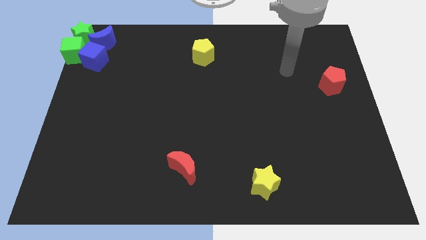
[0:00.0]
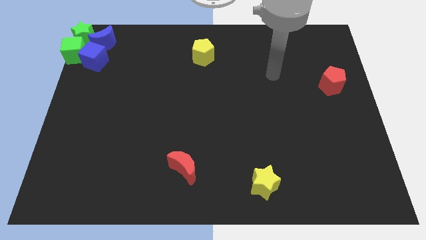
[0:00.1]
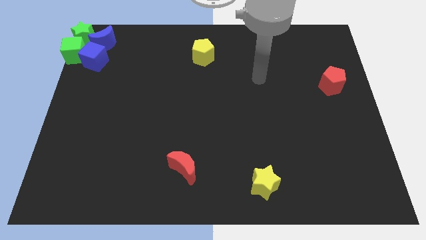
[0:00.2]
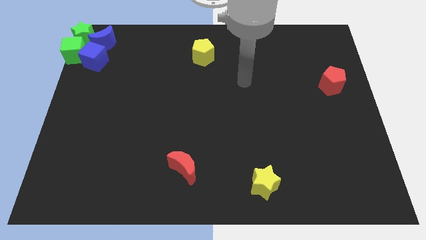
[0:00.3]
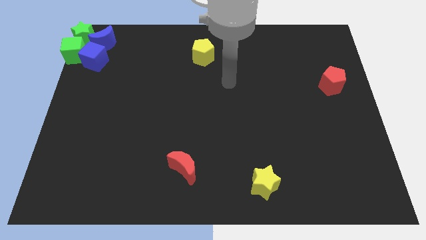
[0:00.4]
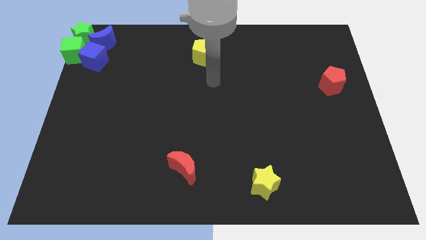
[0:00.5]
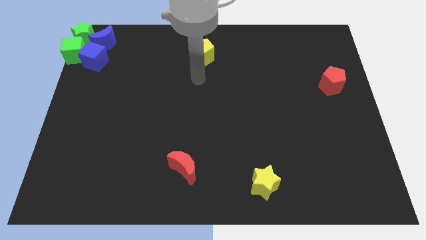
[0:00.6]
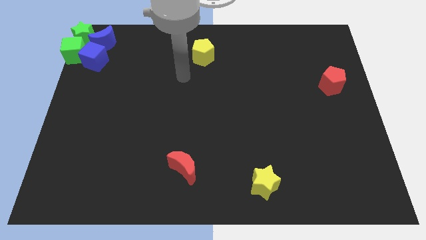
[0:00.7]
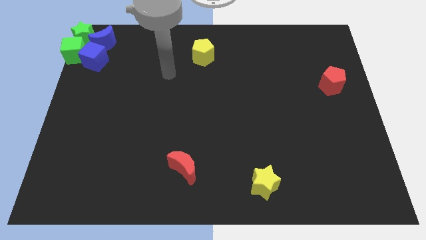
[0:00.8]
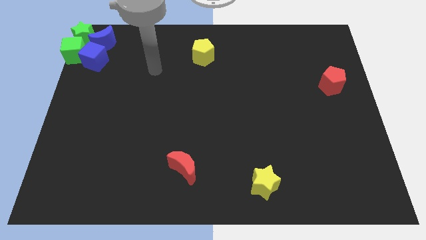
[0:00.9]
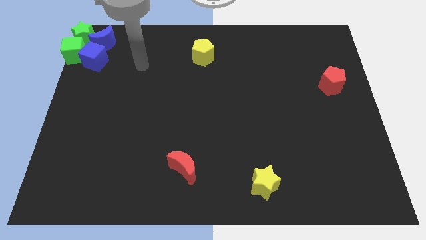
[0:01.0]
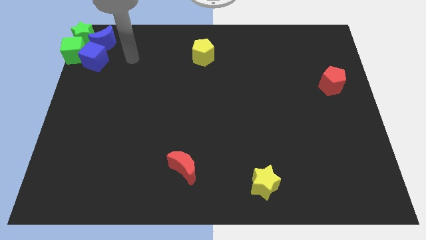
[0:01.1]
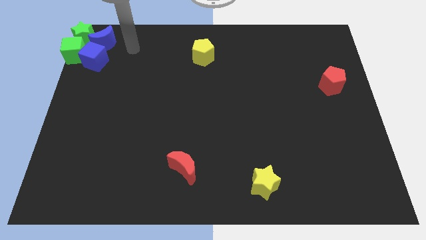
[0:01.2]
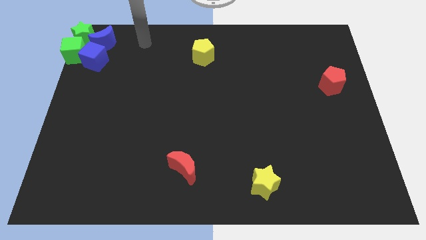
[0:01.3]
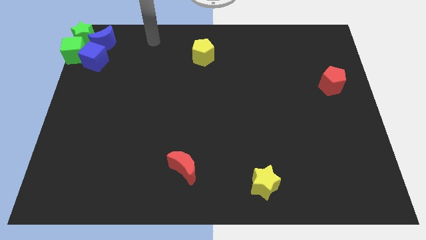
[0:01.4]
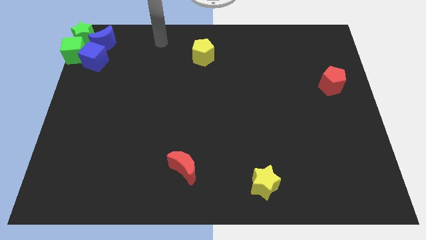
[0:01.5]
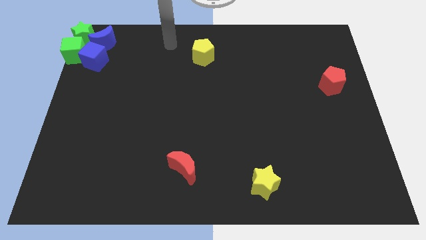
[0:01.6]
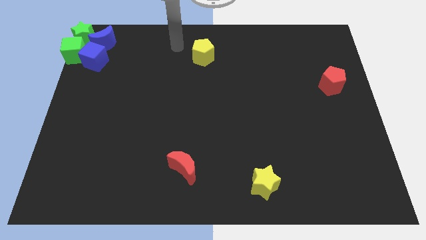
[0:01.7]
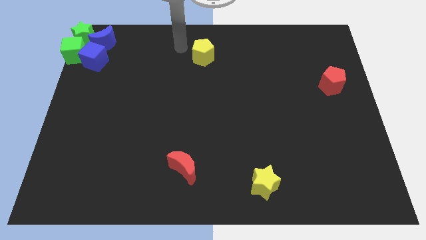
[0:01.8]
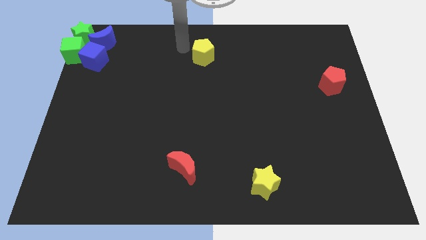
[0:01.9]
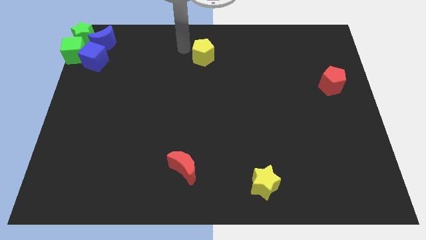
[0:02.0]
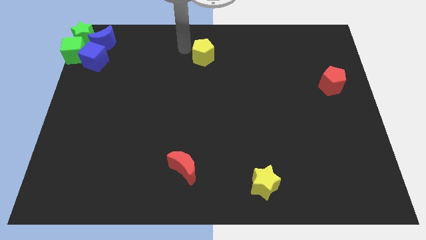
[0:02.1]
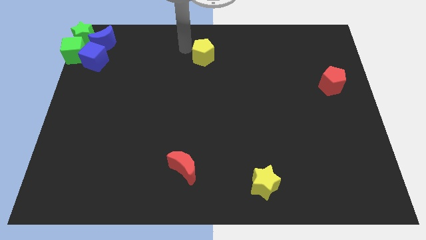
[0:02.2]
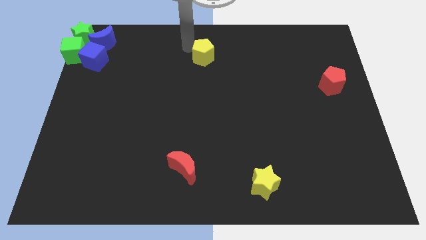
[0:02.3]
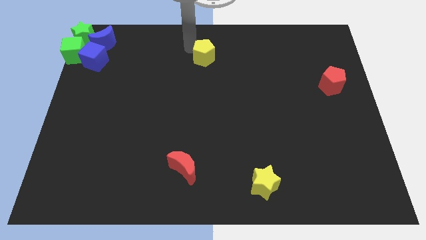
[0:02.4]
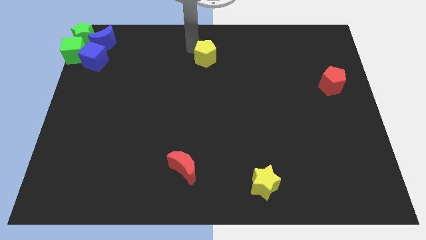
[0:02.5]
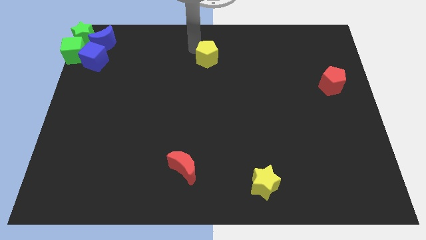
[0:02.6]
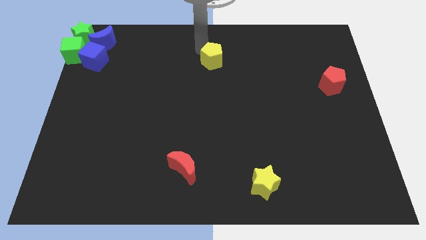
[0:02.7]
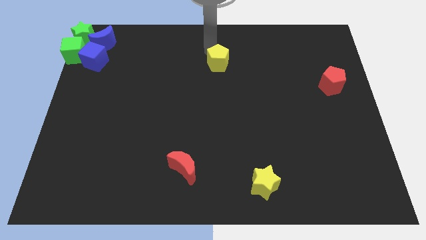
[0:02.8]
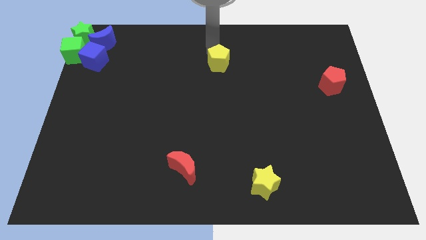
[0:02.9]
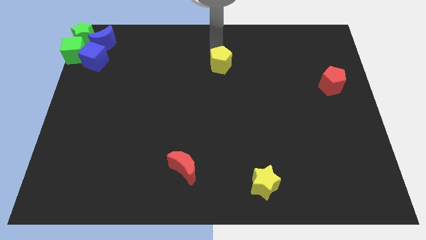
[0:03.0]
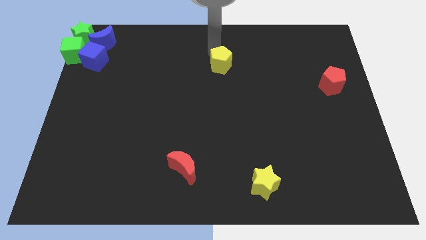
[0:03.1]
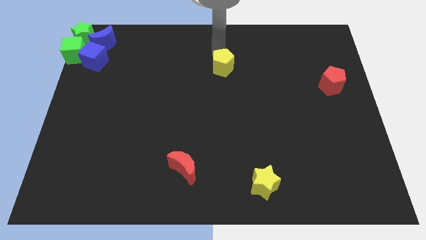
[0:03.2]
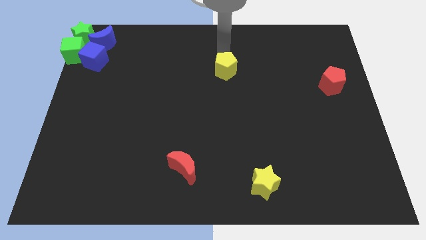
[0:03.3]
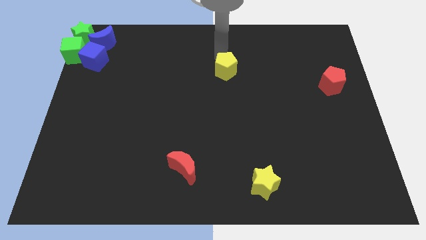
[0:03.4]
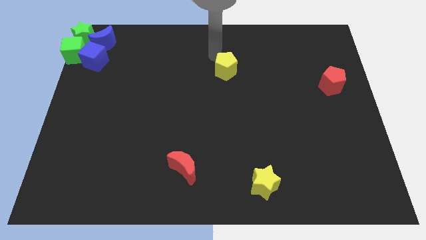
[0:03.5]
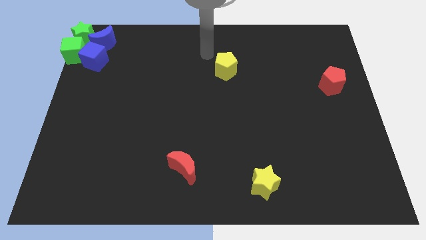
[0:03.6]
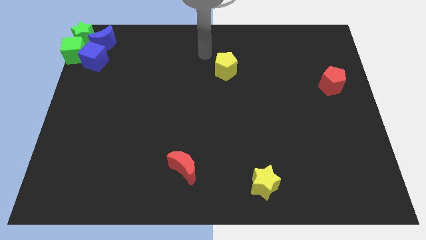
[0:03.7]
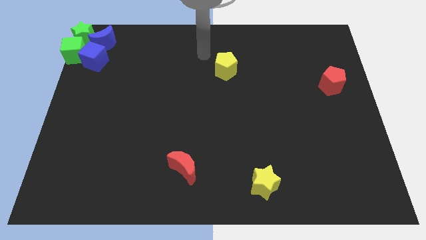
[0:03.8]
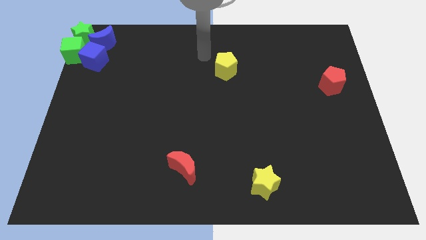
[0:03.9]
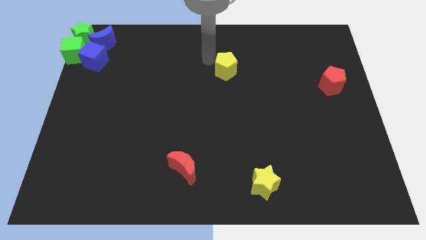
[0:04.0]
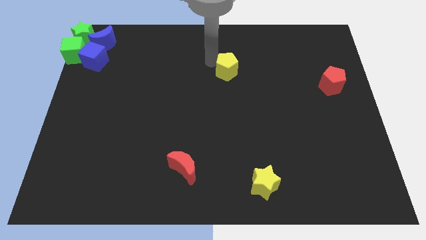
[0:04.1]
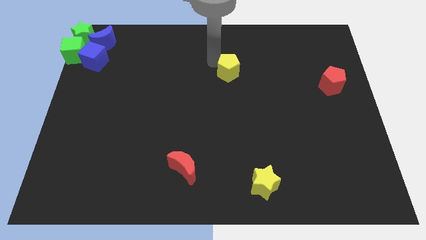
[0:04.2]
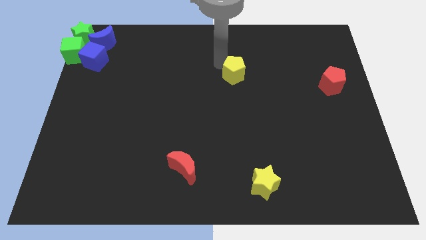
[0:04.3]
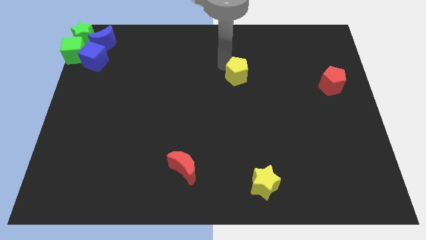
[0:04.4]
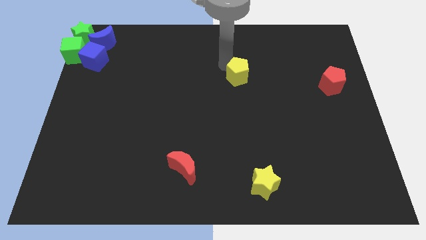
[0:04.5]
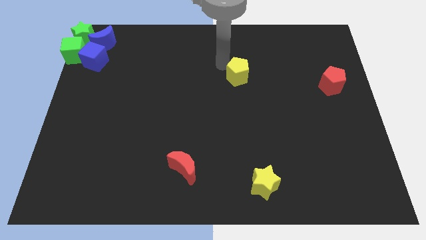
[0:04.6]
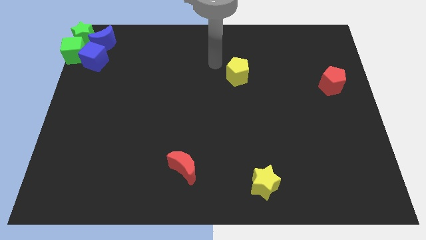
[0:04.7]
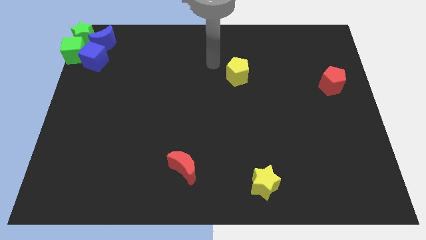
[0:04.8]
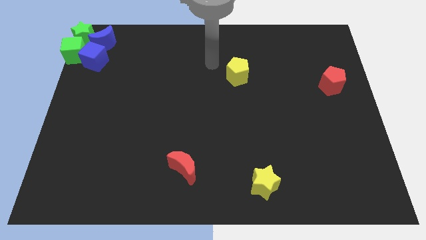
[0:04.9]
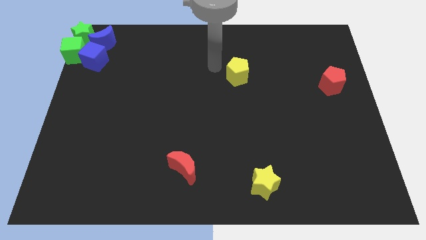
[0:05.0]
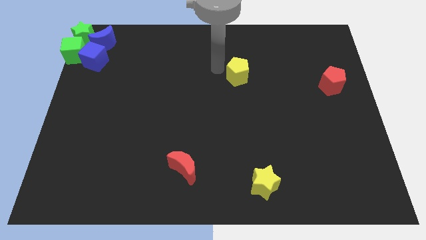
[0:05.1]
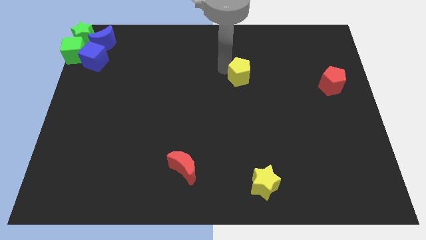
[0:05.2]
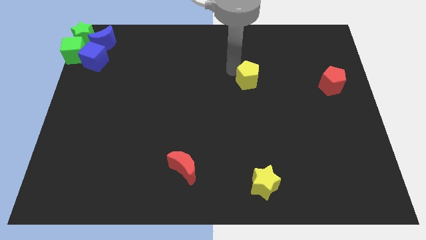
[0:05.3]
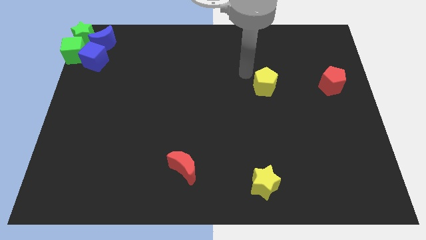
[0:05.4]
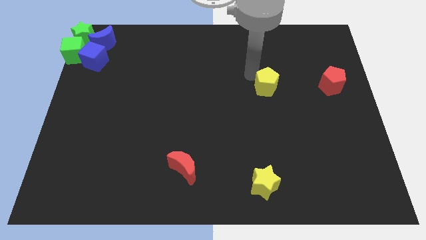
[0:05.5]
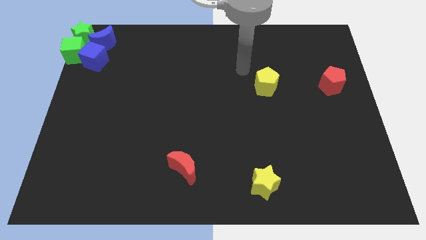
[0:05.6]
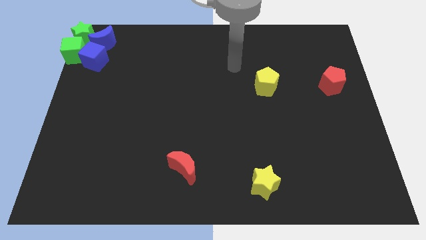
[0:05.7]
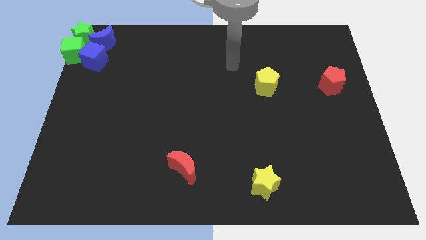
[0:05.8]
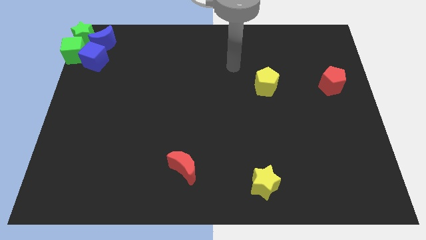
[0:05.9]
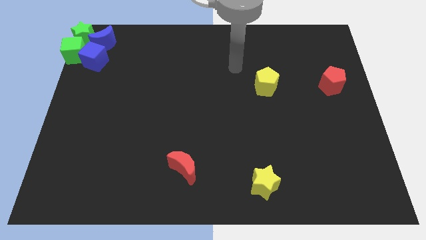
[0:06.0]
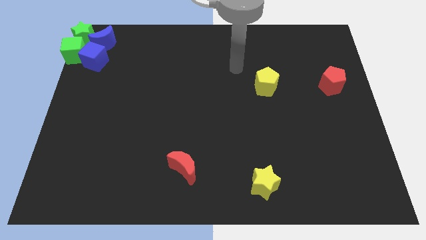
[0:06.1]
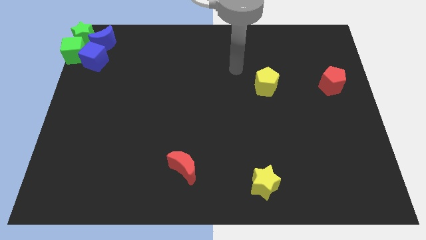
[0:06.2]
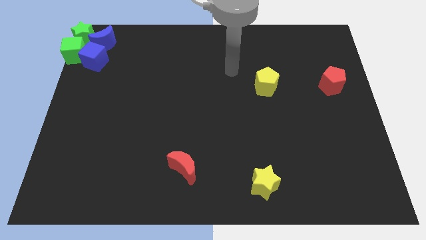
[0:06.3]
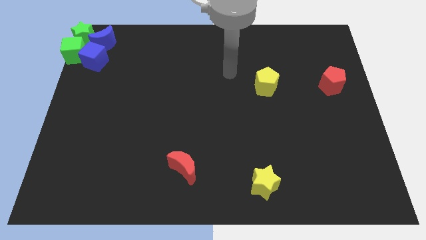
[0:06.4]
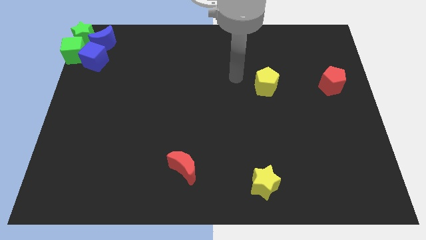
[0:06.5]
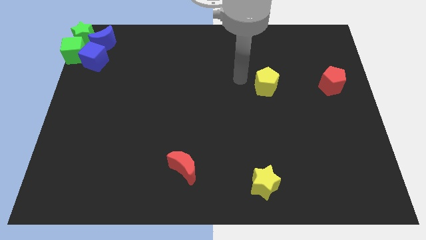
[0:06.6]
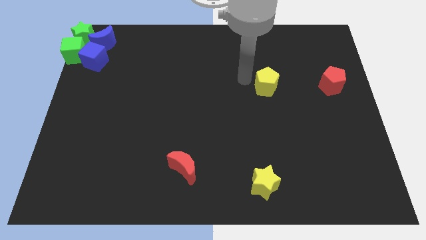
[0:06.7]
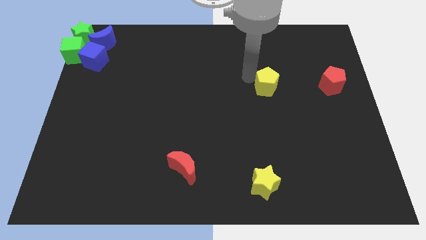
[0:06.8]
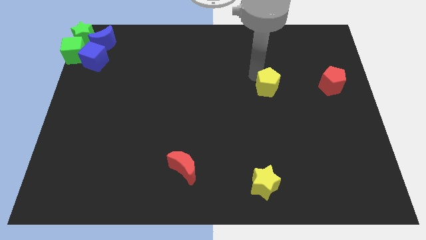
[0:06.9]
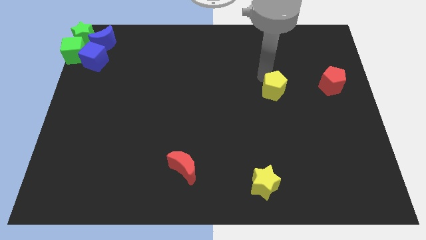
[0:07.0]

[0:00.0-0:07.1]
push the yellow pentagon to the left of the red pentagon

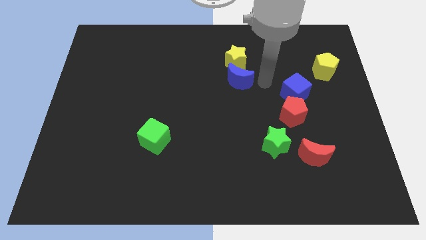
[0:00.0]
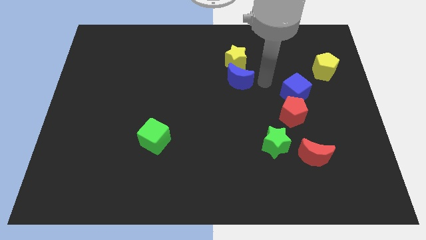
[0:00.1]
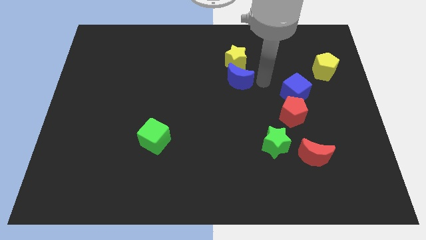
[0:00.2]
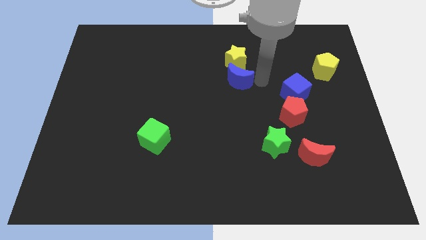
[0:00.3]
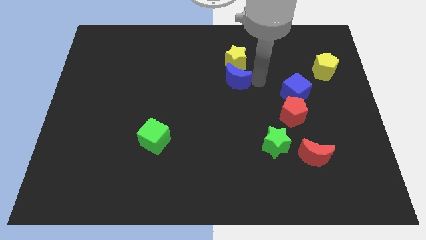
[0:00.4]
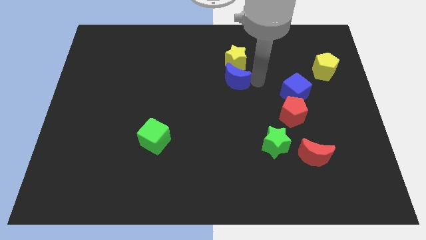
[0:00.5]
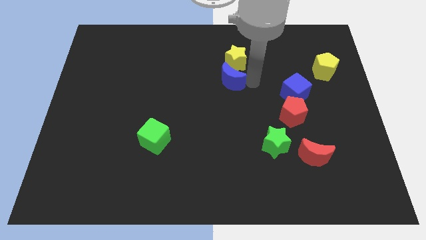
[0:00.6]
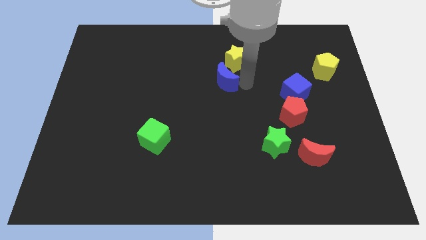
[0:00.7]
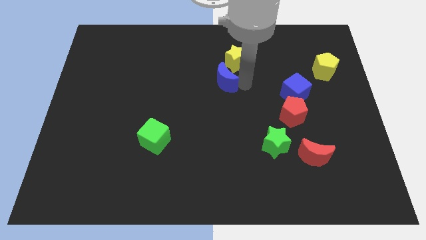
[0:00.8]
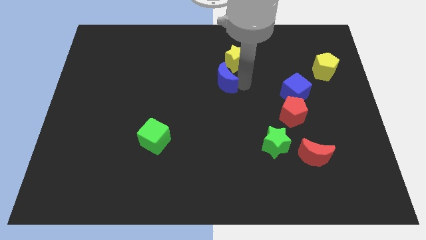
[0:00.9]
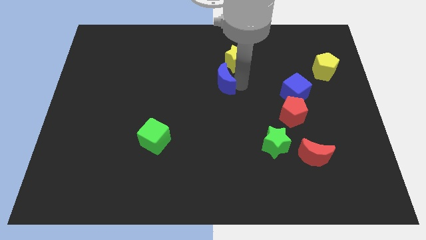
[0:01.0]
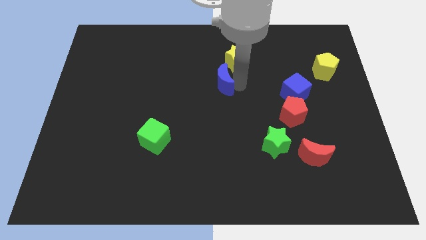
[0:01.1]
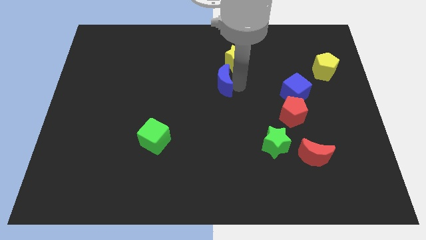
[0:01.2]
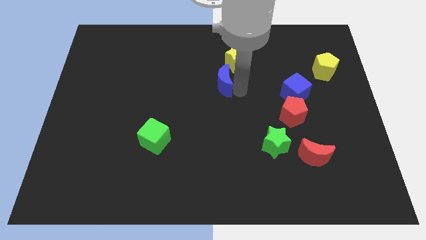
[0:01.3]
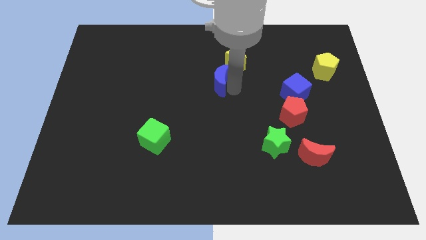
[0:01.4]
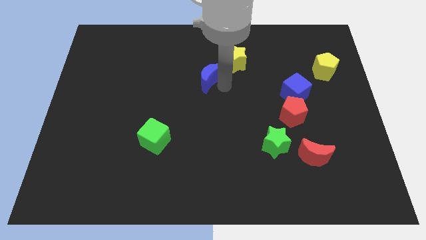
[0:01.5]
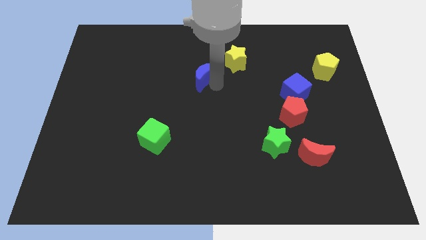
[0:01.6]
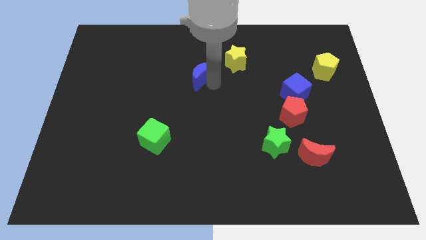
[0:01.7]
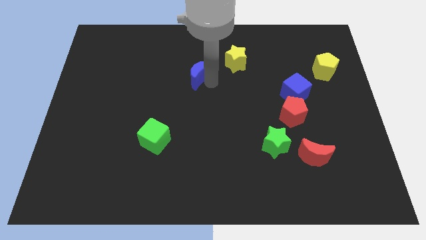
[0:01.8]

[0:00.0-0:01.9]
place the blue moon diagonally bottom left to the yellow star
